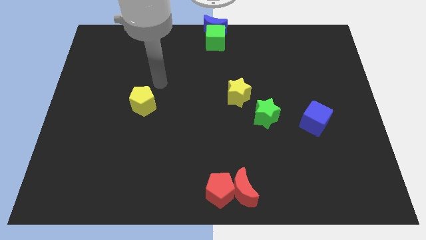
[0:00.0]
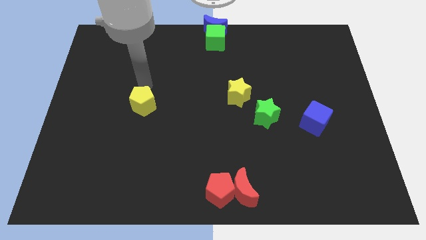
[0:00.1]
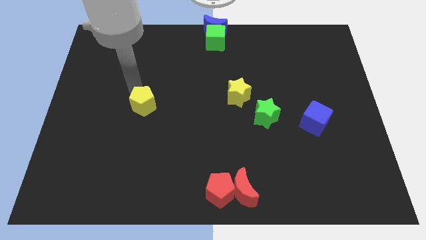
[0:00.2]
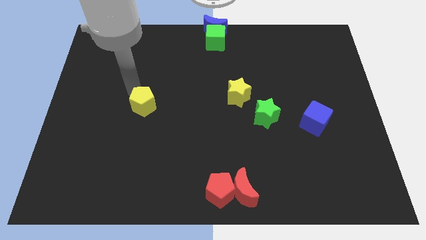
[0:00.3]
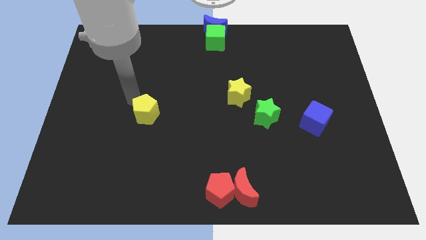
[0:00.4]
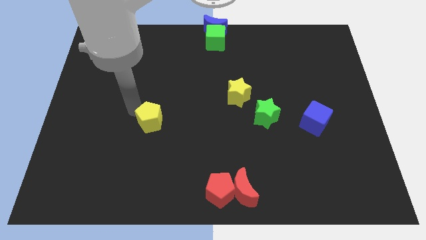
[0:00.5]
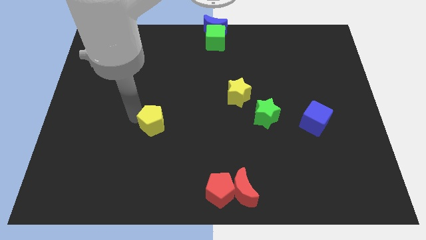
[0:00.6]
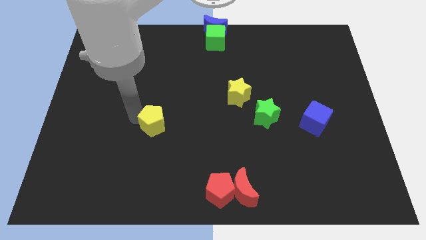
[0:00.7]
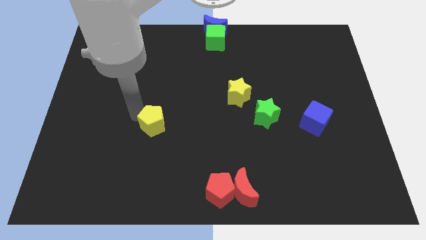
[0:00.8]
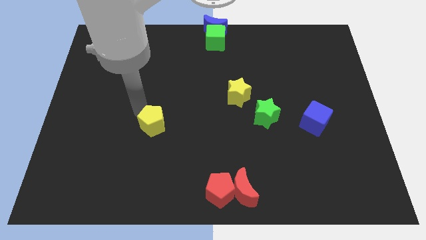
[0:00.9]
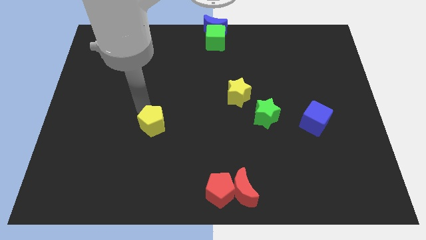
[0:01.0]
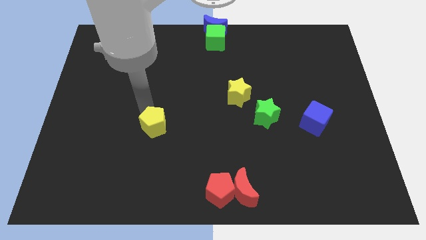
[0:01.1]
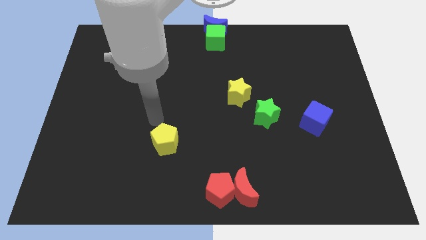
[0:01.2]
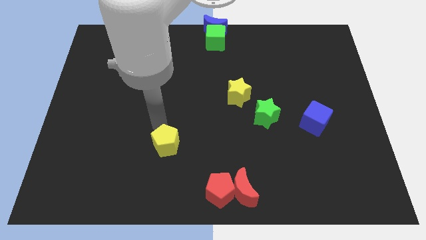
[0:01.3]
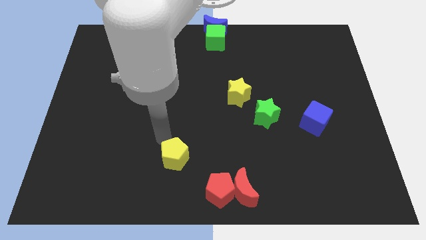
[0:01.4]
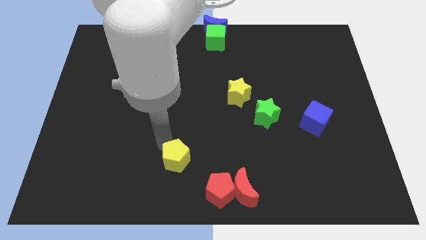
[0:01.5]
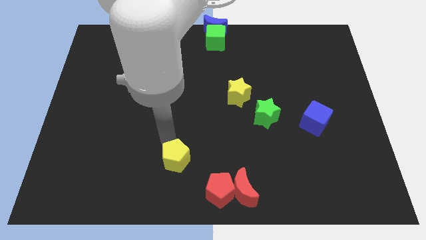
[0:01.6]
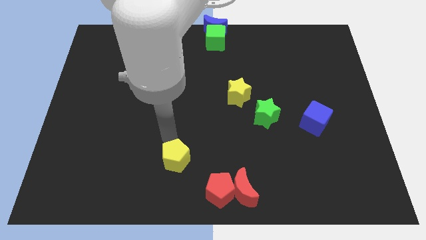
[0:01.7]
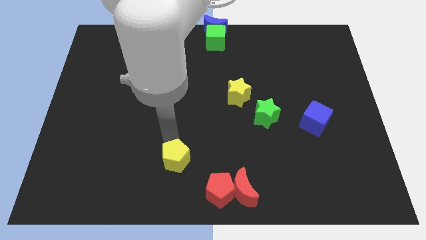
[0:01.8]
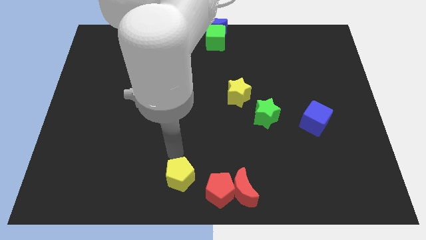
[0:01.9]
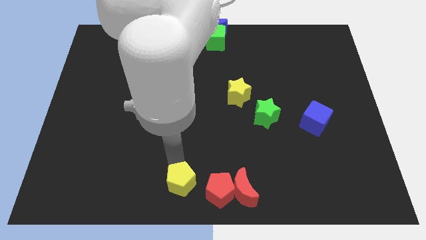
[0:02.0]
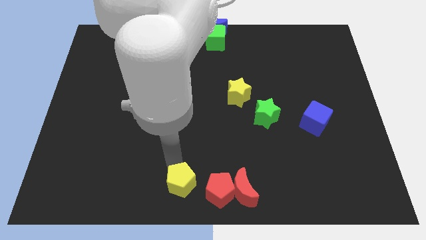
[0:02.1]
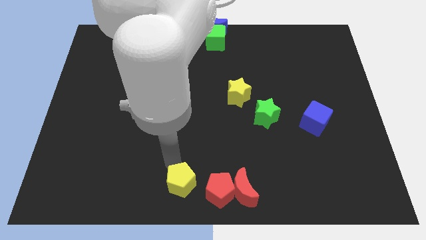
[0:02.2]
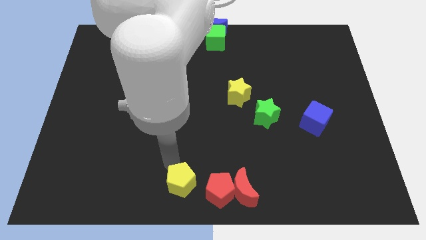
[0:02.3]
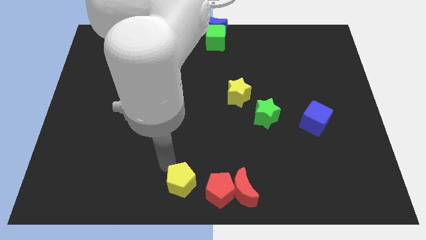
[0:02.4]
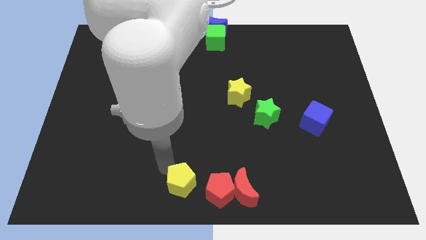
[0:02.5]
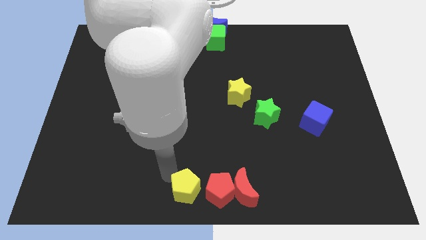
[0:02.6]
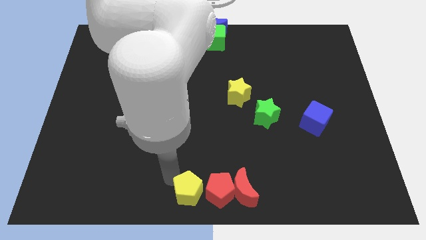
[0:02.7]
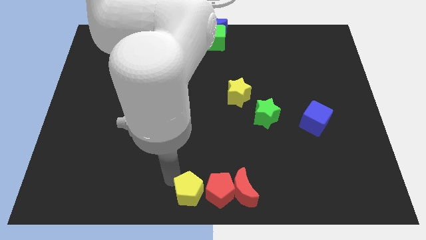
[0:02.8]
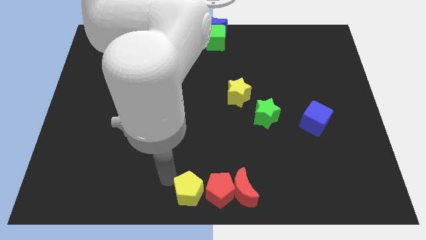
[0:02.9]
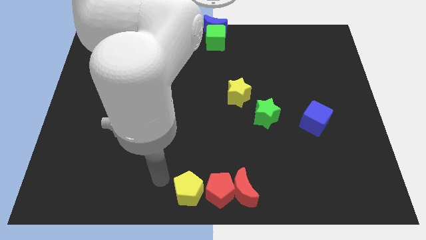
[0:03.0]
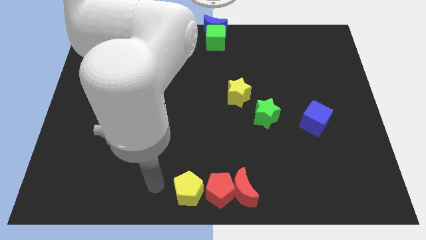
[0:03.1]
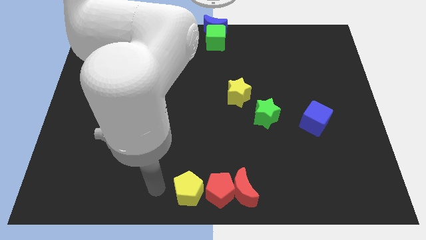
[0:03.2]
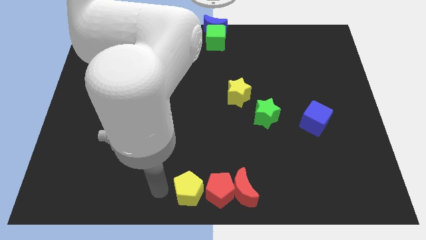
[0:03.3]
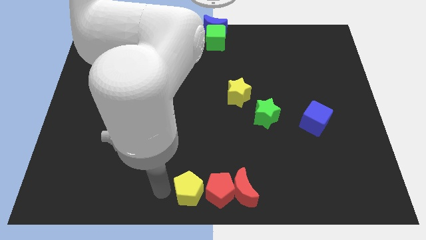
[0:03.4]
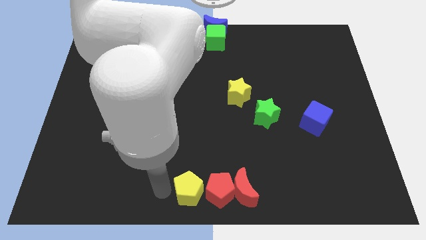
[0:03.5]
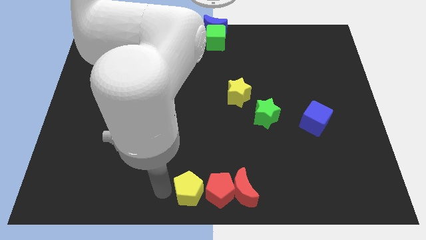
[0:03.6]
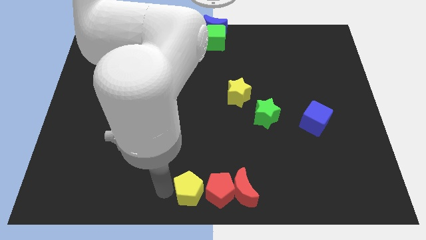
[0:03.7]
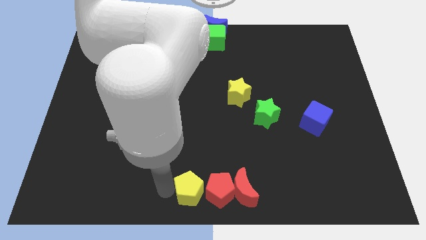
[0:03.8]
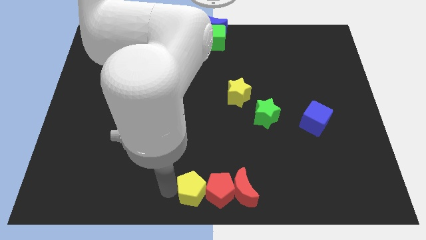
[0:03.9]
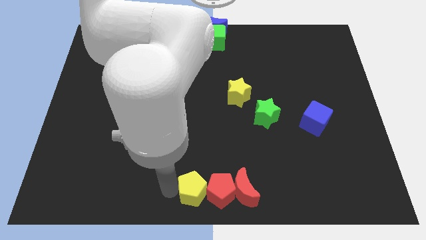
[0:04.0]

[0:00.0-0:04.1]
place yellow pentagon into red pentagon

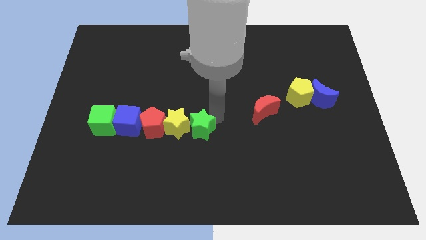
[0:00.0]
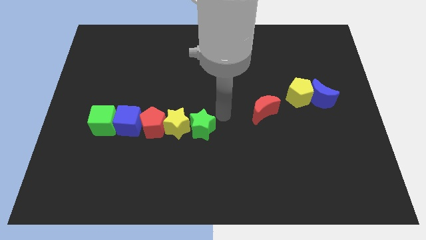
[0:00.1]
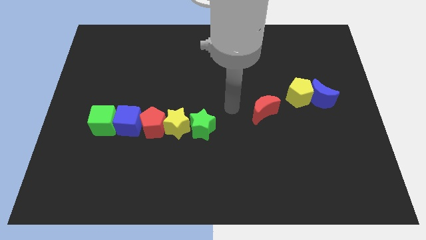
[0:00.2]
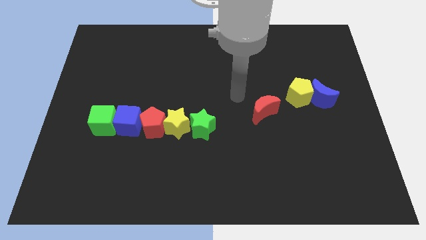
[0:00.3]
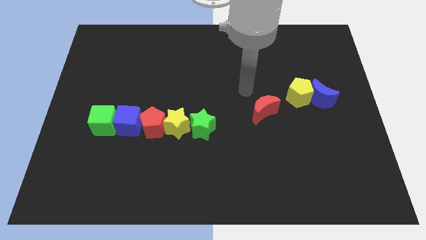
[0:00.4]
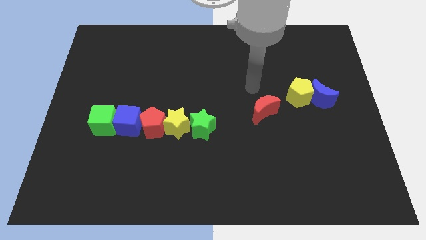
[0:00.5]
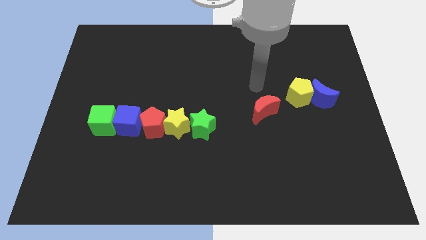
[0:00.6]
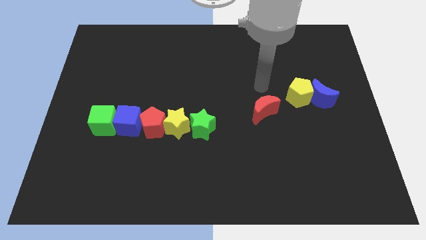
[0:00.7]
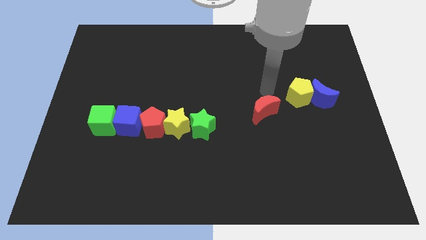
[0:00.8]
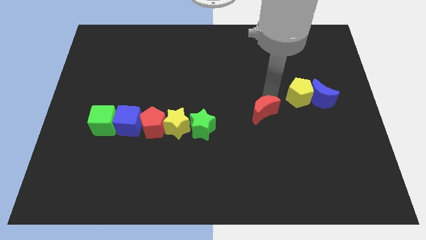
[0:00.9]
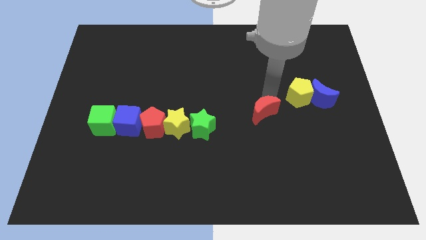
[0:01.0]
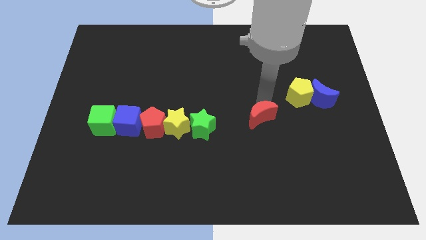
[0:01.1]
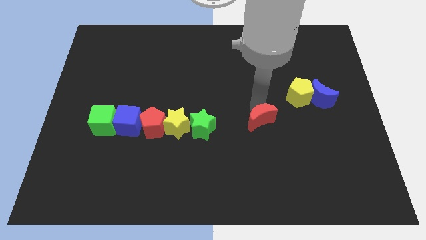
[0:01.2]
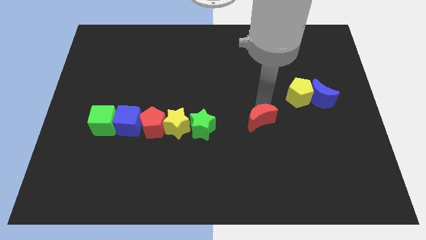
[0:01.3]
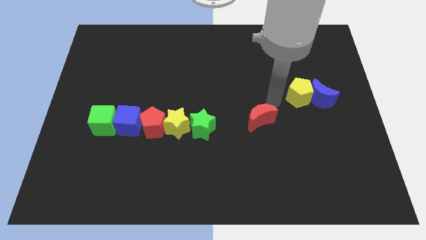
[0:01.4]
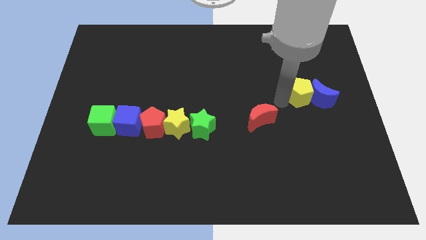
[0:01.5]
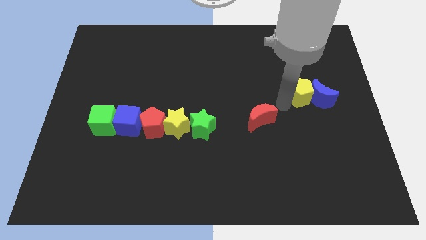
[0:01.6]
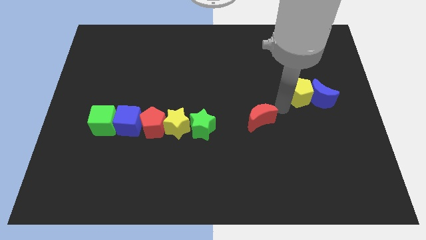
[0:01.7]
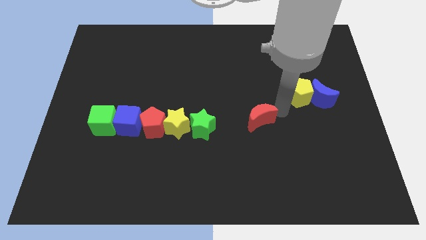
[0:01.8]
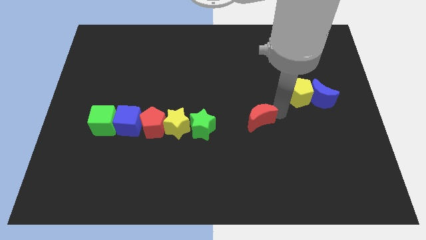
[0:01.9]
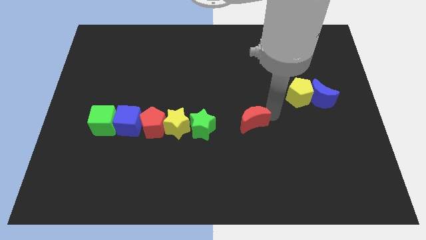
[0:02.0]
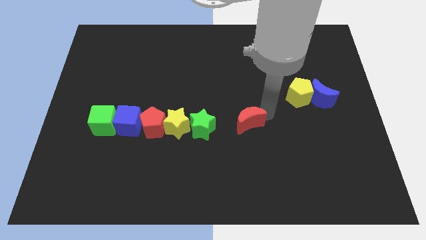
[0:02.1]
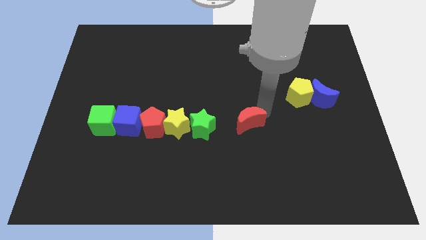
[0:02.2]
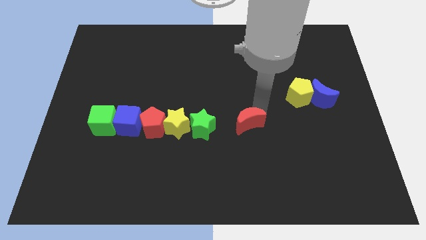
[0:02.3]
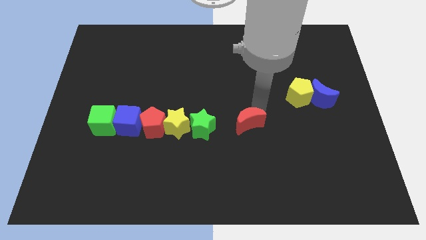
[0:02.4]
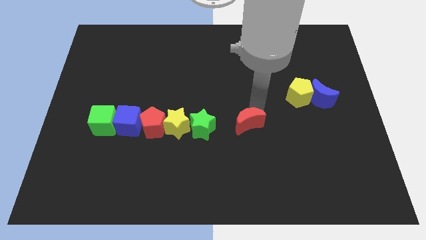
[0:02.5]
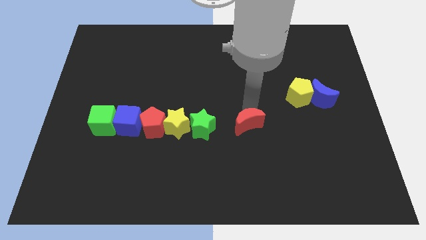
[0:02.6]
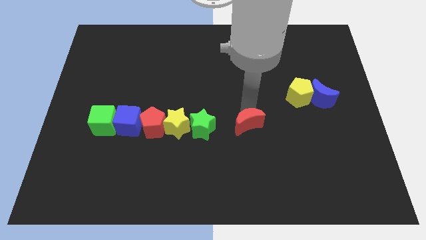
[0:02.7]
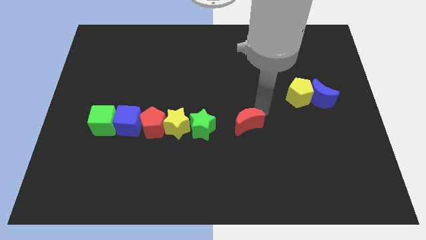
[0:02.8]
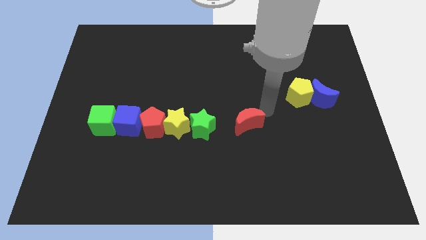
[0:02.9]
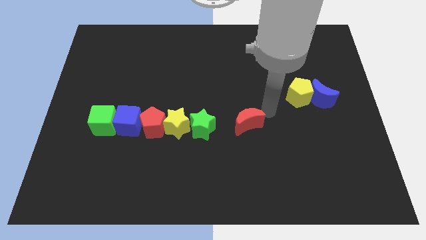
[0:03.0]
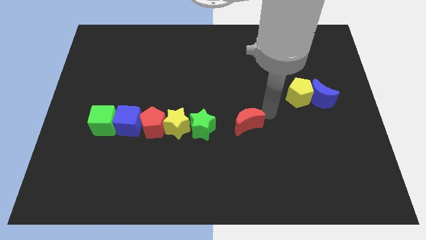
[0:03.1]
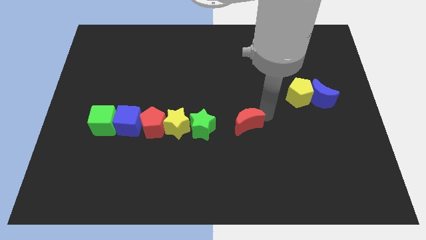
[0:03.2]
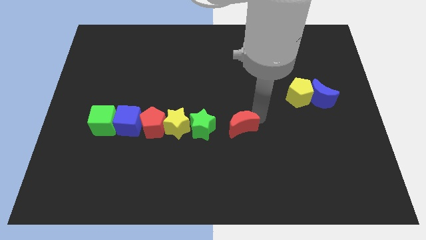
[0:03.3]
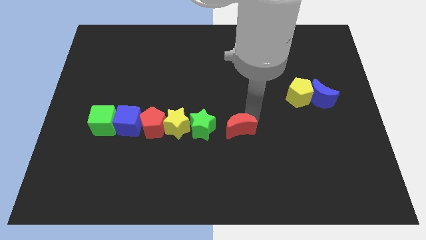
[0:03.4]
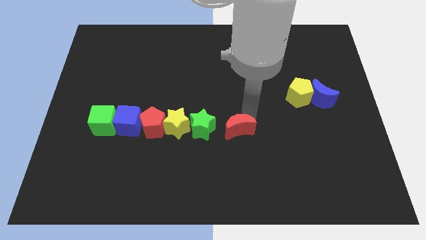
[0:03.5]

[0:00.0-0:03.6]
place the red crescent to the right of the green star

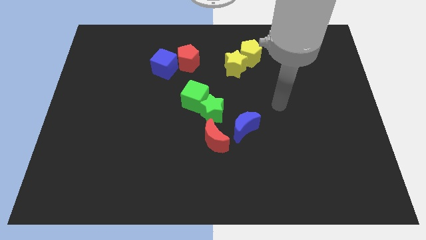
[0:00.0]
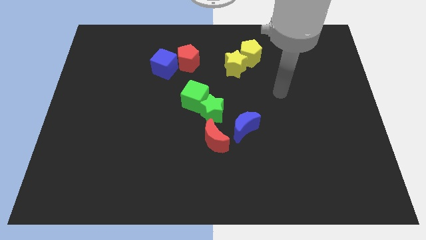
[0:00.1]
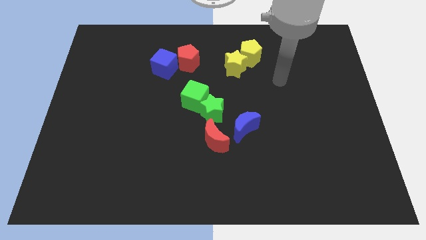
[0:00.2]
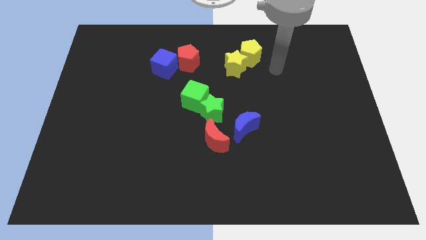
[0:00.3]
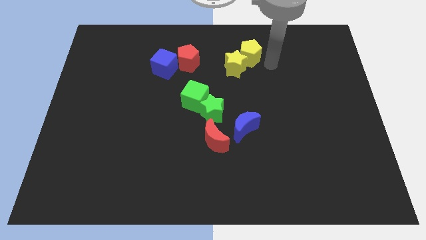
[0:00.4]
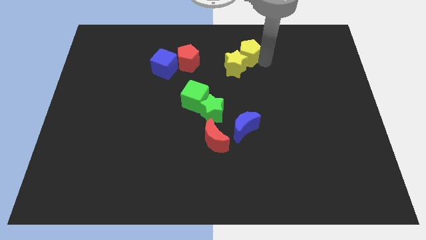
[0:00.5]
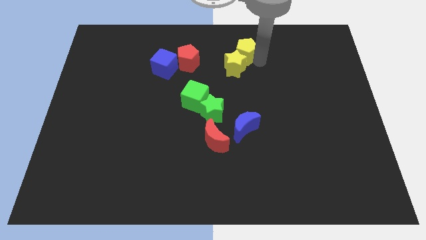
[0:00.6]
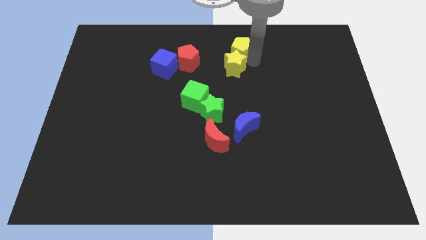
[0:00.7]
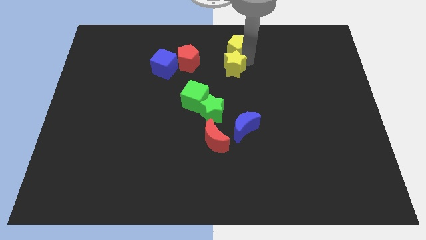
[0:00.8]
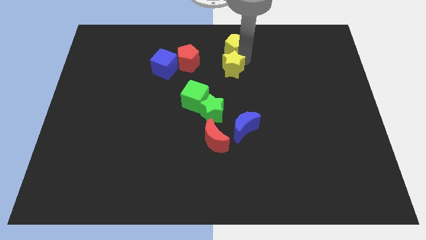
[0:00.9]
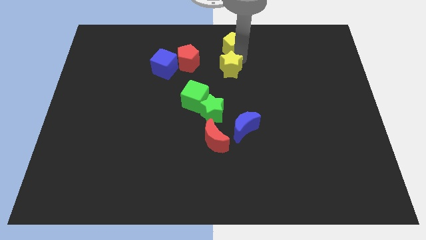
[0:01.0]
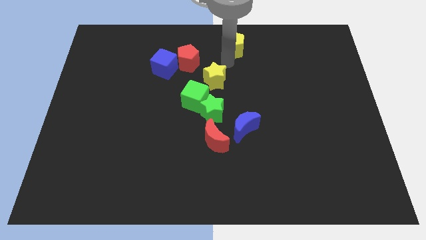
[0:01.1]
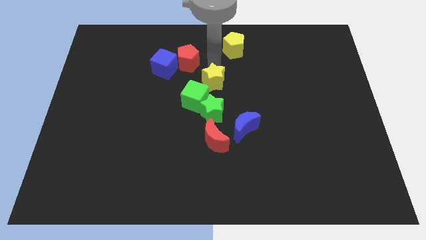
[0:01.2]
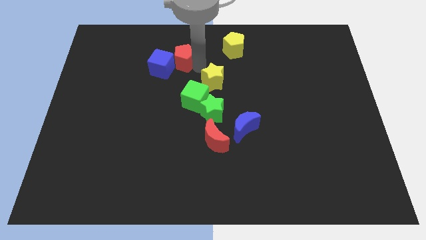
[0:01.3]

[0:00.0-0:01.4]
separate the yellow star and the yellow pentagon
